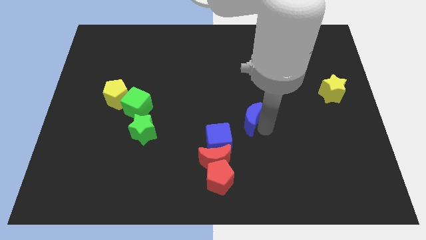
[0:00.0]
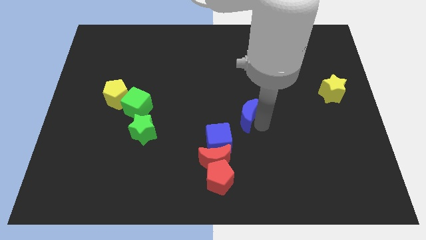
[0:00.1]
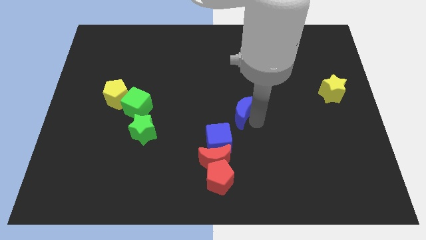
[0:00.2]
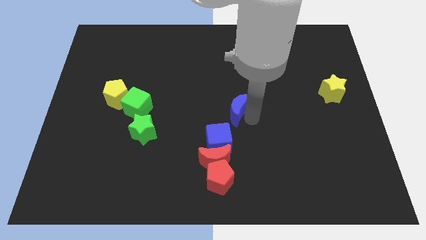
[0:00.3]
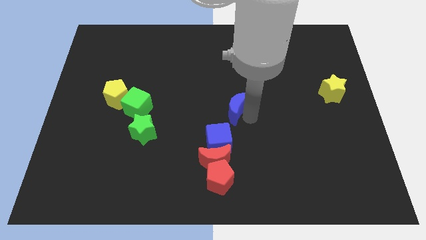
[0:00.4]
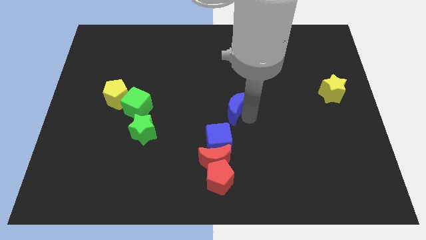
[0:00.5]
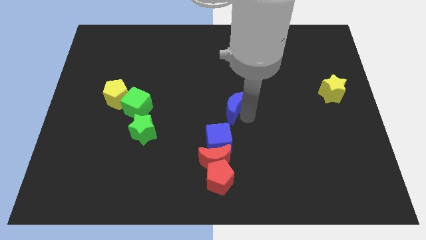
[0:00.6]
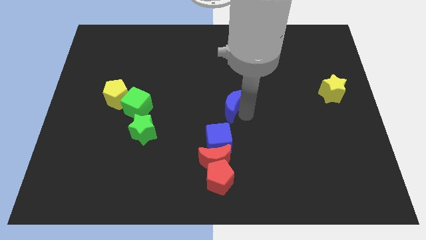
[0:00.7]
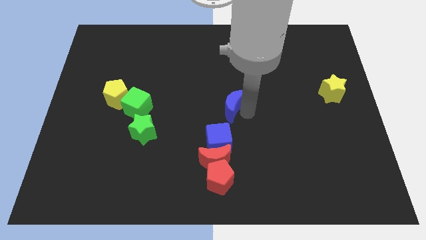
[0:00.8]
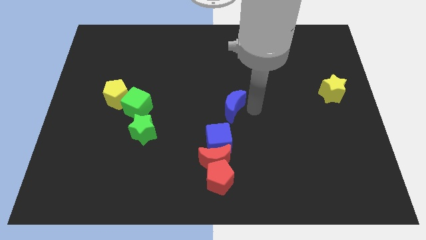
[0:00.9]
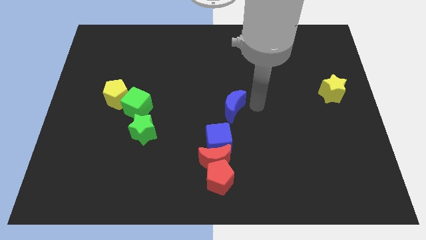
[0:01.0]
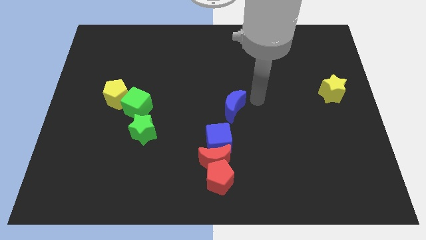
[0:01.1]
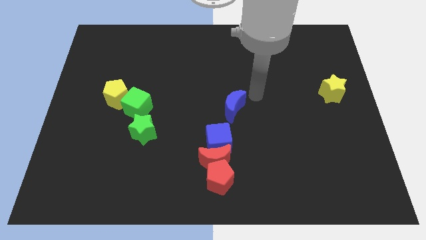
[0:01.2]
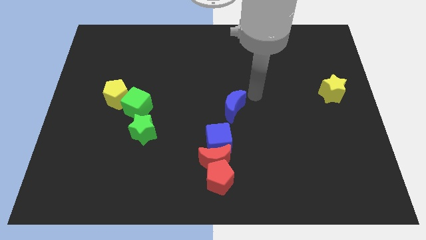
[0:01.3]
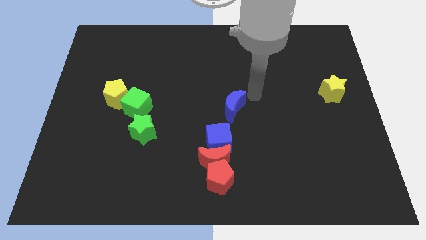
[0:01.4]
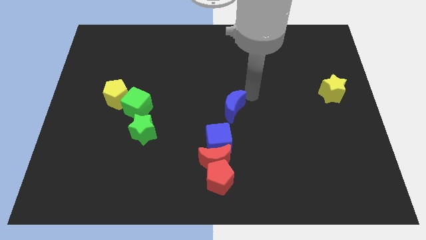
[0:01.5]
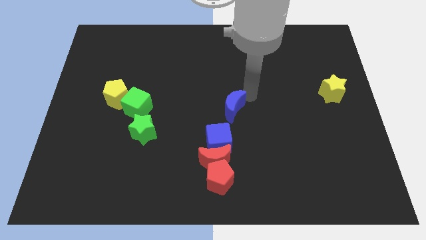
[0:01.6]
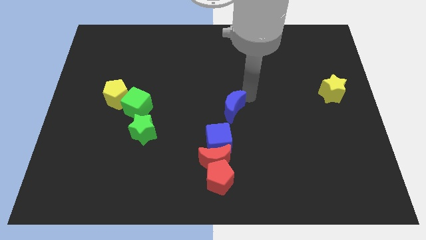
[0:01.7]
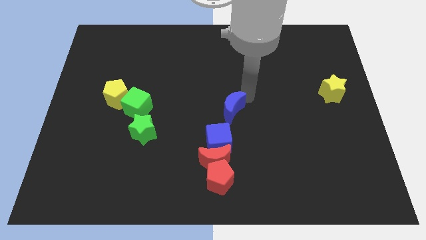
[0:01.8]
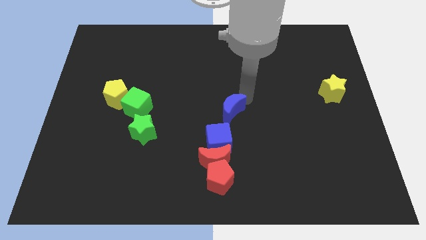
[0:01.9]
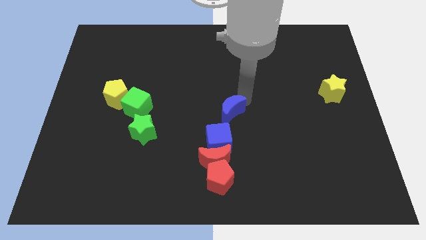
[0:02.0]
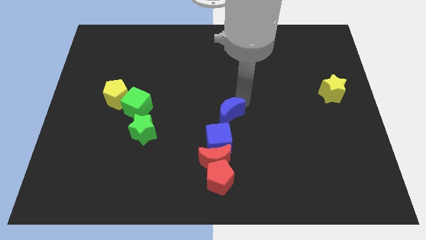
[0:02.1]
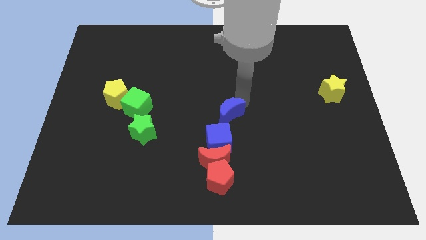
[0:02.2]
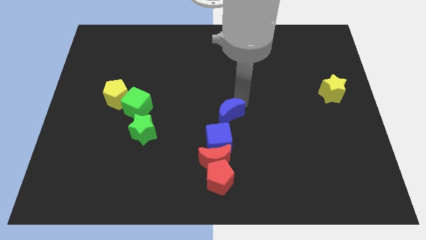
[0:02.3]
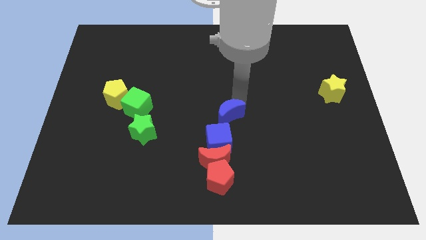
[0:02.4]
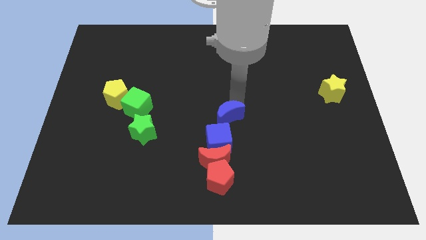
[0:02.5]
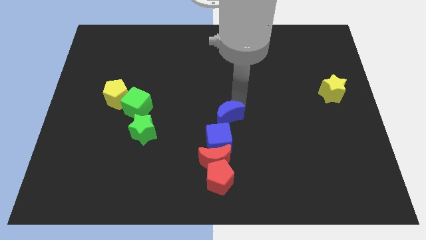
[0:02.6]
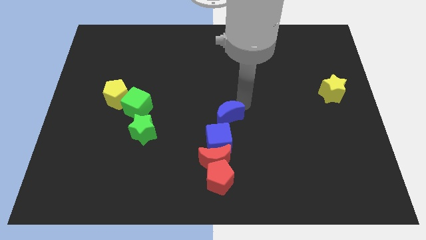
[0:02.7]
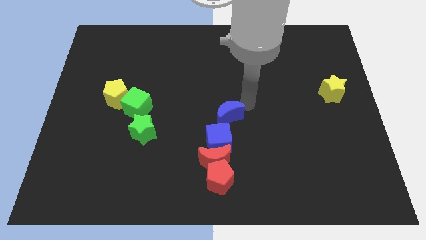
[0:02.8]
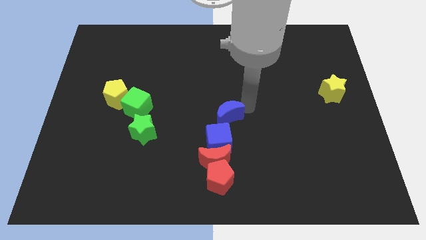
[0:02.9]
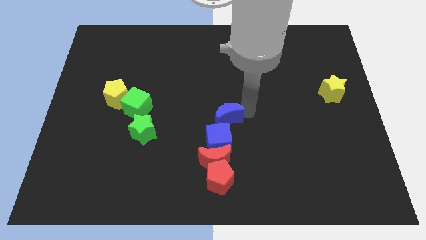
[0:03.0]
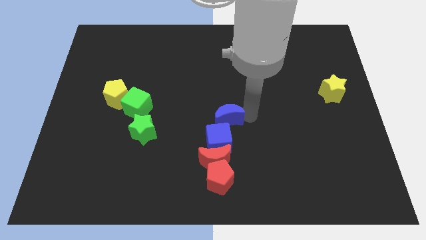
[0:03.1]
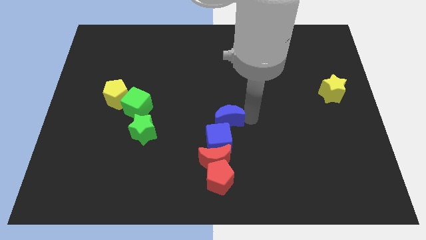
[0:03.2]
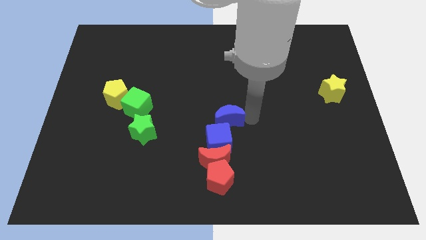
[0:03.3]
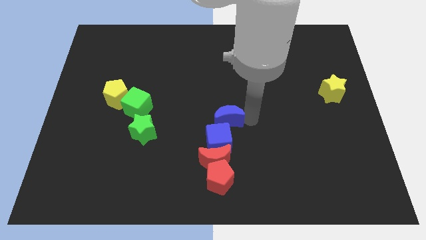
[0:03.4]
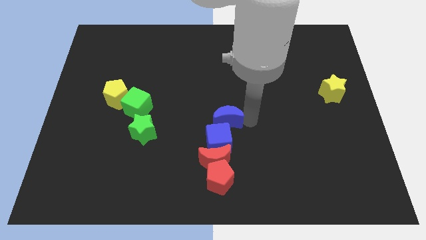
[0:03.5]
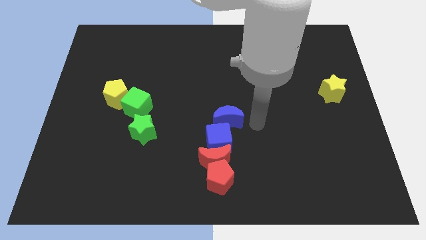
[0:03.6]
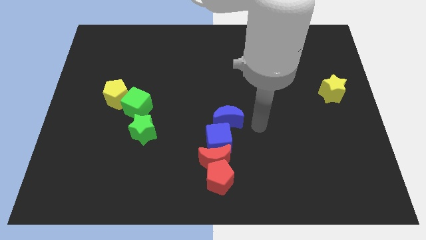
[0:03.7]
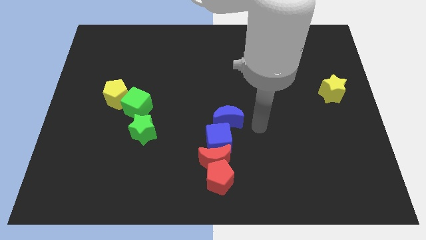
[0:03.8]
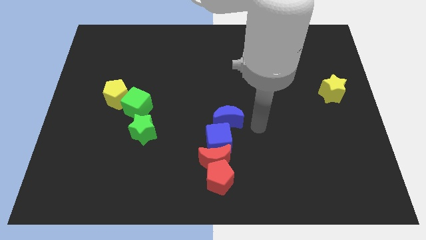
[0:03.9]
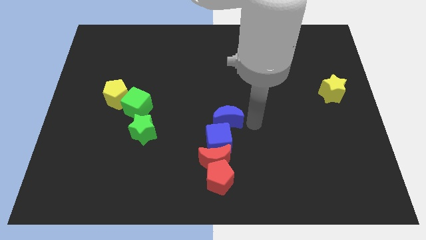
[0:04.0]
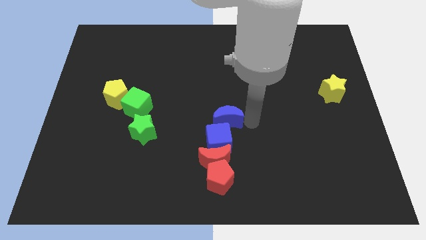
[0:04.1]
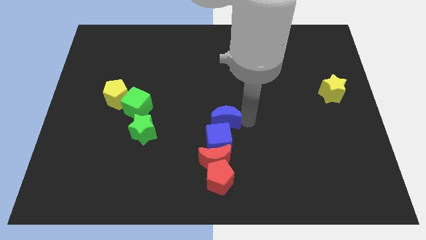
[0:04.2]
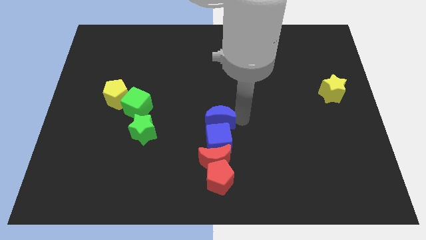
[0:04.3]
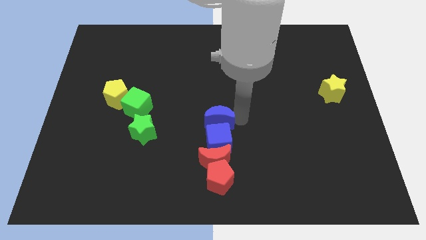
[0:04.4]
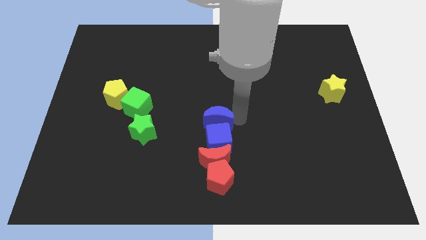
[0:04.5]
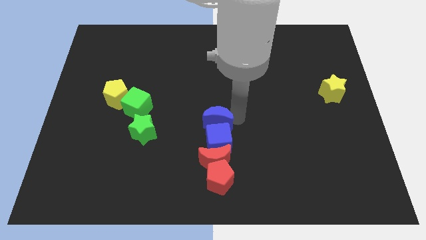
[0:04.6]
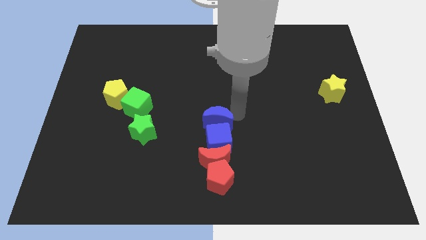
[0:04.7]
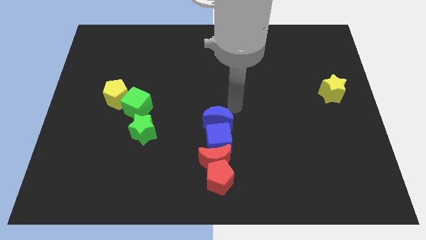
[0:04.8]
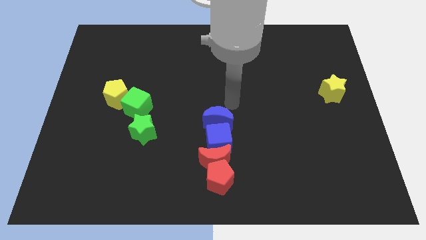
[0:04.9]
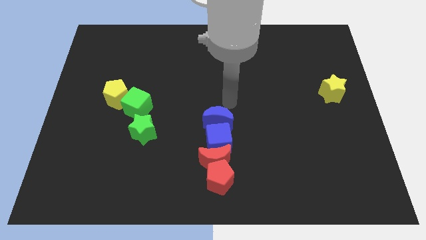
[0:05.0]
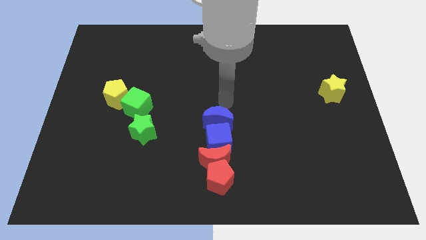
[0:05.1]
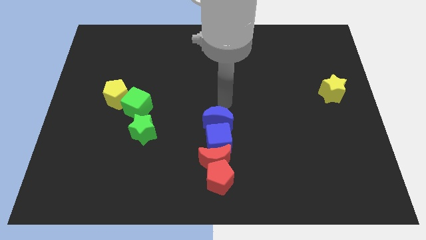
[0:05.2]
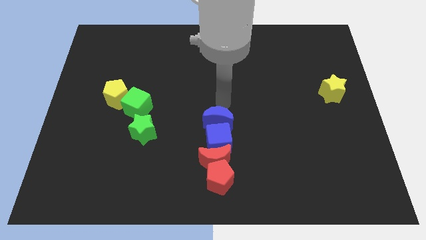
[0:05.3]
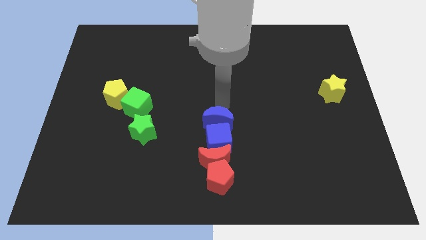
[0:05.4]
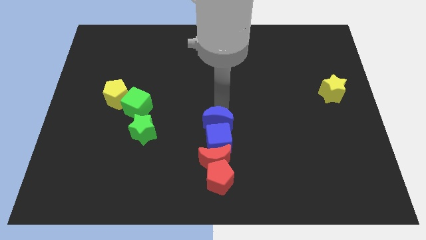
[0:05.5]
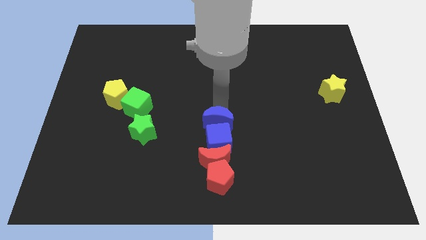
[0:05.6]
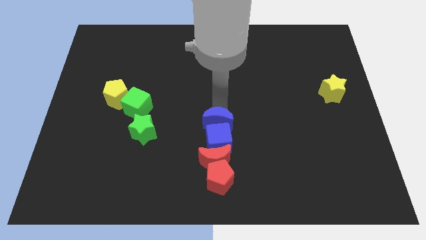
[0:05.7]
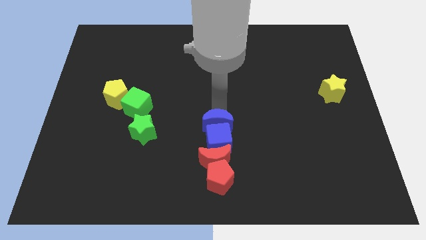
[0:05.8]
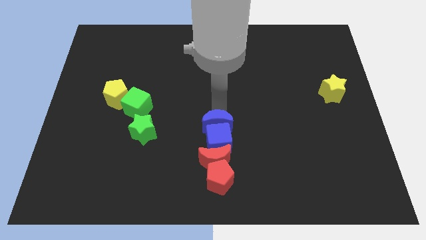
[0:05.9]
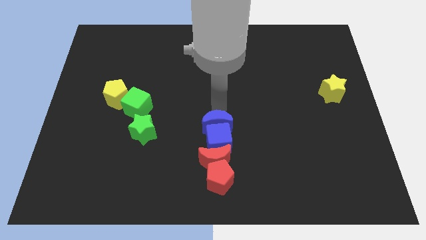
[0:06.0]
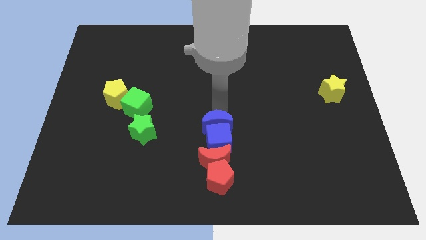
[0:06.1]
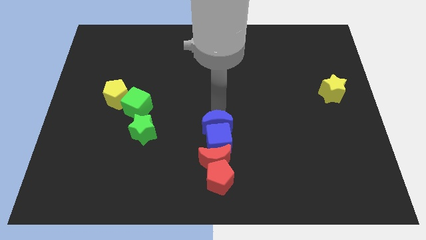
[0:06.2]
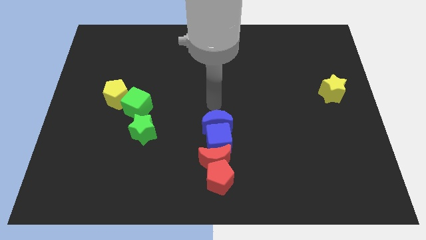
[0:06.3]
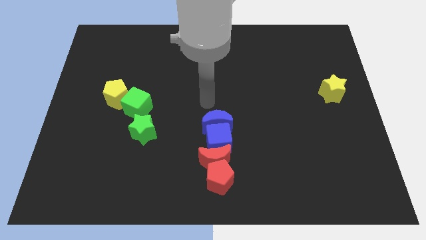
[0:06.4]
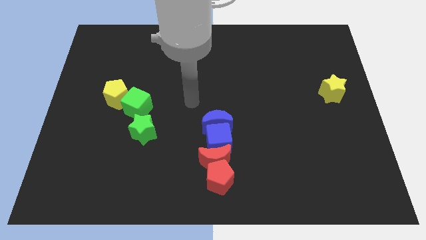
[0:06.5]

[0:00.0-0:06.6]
move blue moon into the blue cube

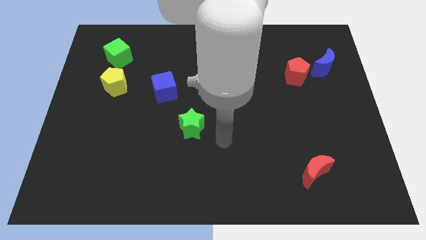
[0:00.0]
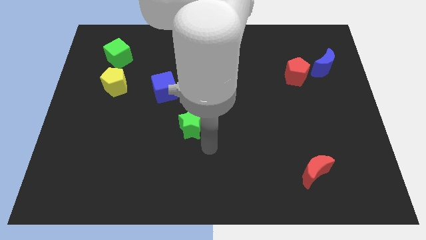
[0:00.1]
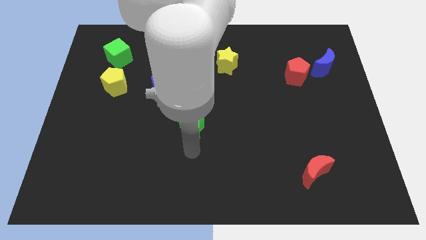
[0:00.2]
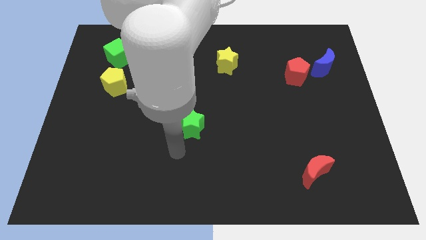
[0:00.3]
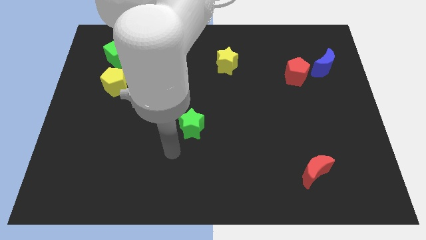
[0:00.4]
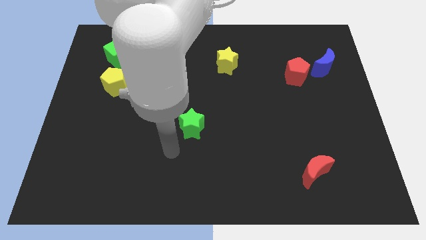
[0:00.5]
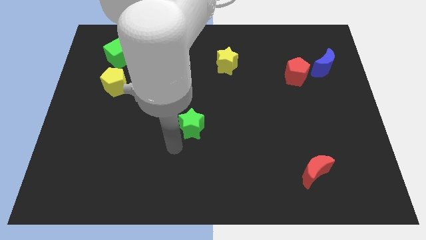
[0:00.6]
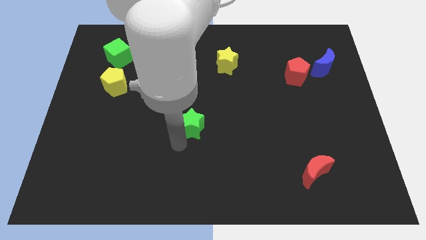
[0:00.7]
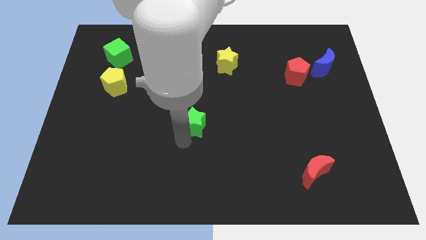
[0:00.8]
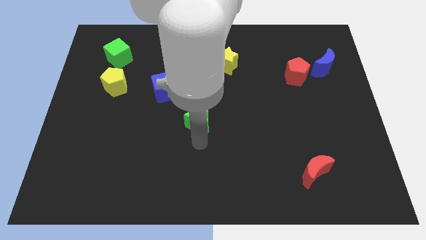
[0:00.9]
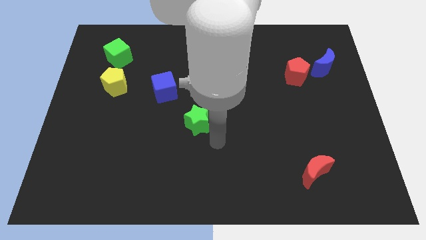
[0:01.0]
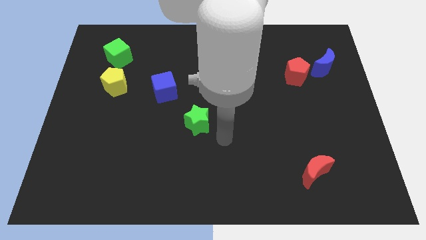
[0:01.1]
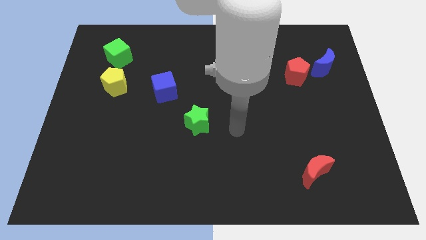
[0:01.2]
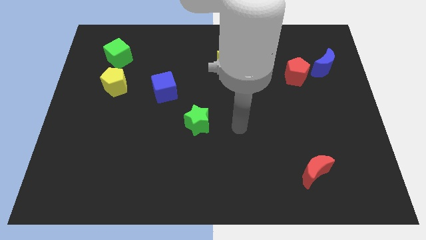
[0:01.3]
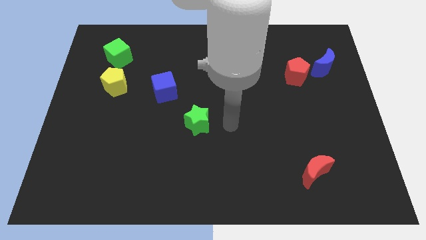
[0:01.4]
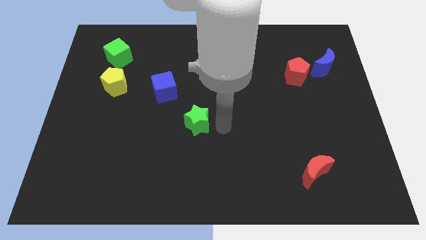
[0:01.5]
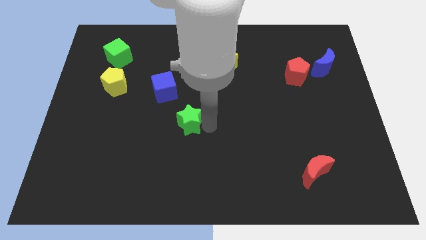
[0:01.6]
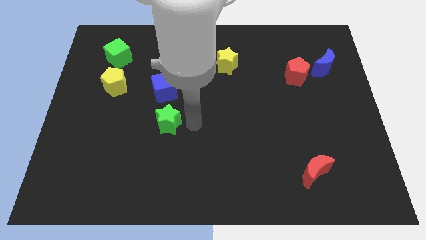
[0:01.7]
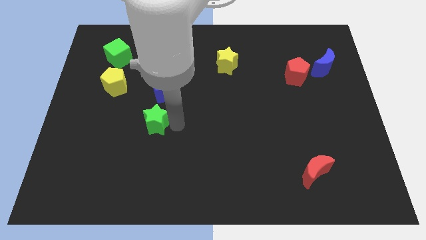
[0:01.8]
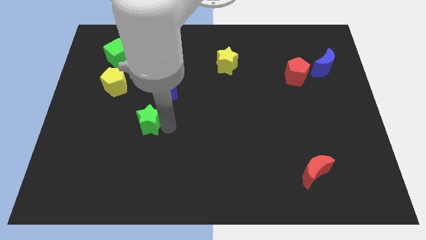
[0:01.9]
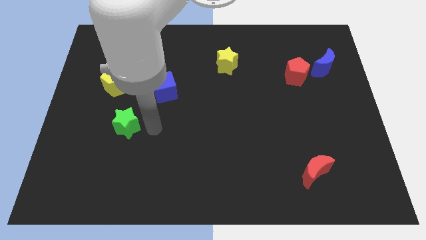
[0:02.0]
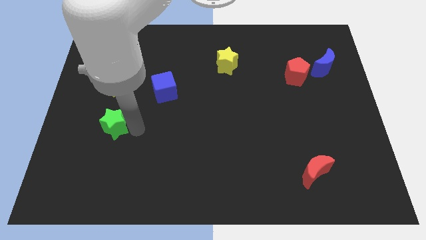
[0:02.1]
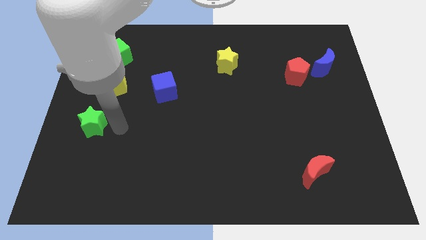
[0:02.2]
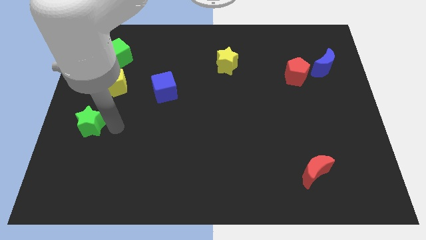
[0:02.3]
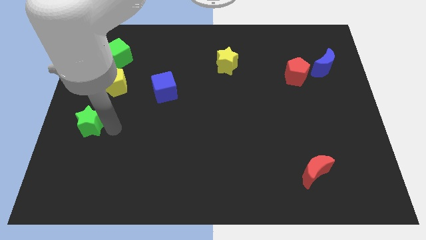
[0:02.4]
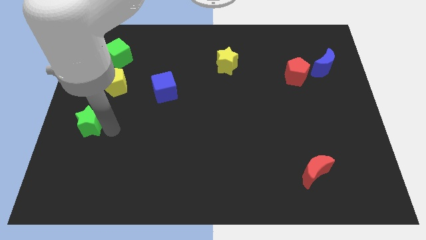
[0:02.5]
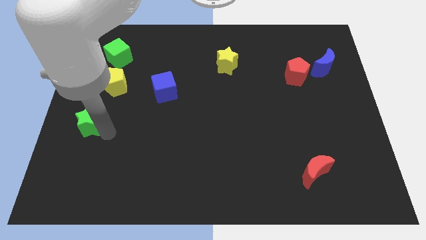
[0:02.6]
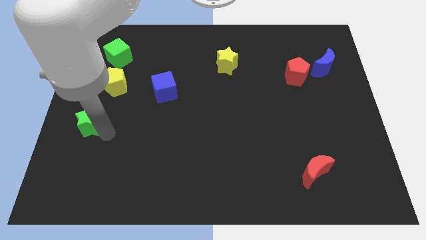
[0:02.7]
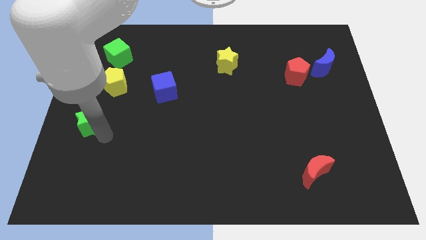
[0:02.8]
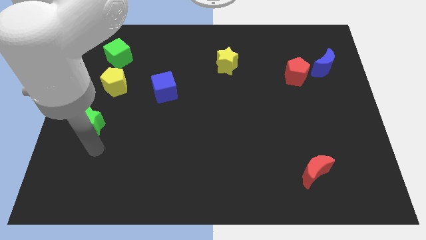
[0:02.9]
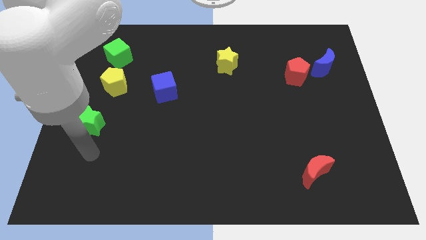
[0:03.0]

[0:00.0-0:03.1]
slide green star towards center left
